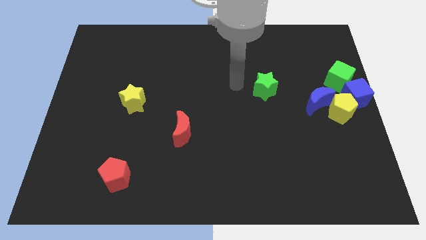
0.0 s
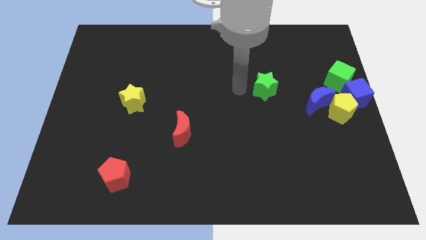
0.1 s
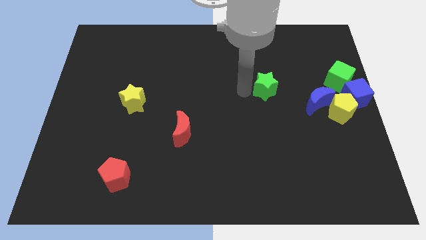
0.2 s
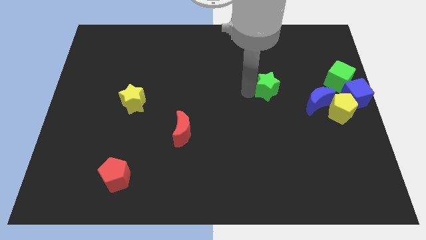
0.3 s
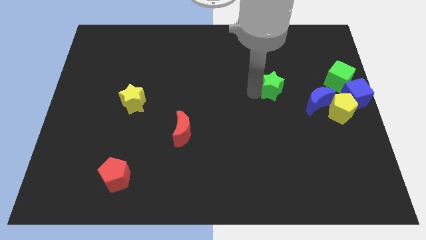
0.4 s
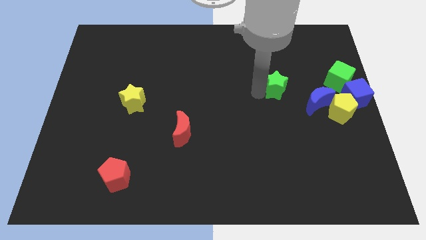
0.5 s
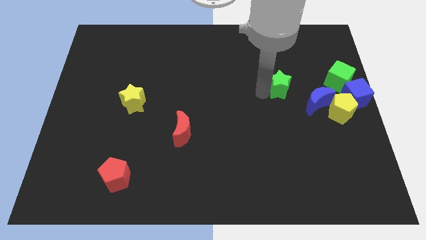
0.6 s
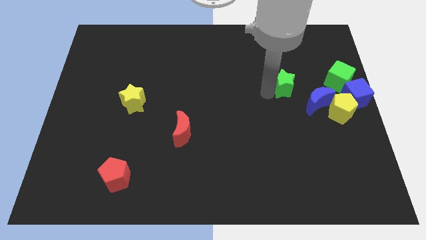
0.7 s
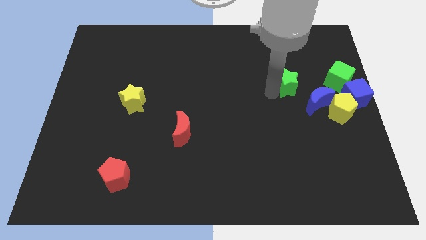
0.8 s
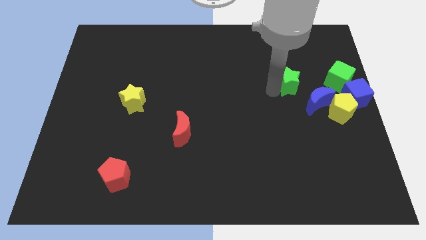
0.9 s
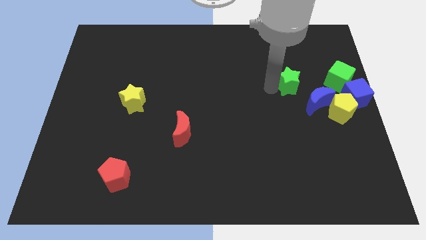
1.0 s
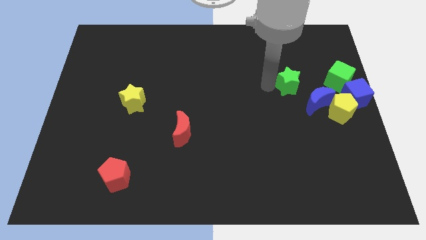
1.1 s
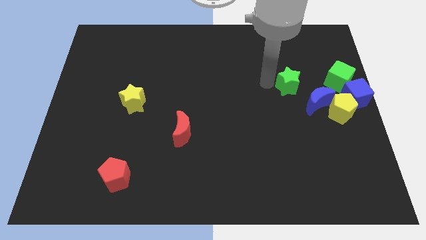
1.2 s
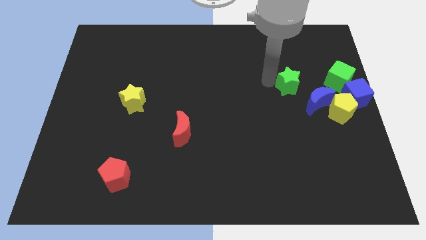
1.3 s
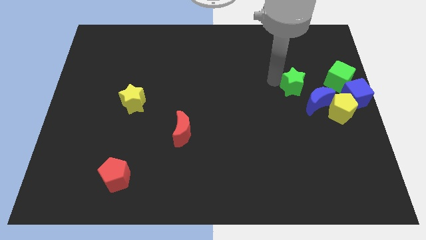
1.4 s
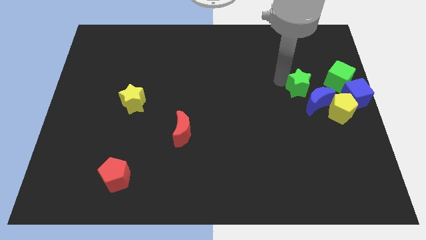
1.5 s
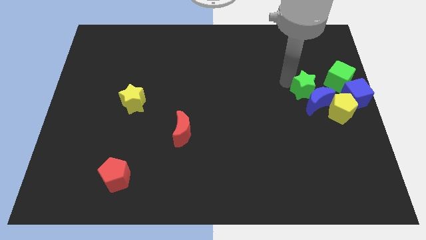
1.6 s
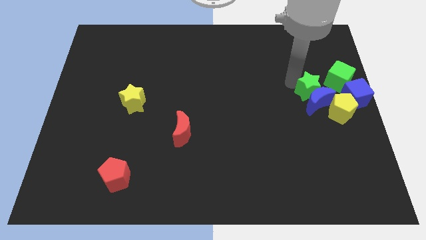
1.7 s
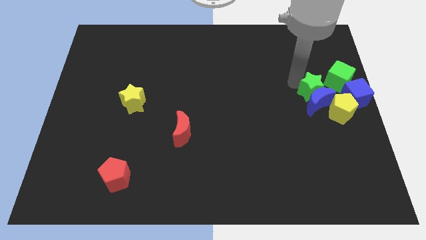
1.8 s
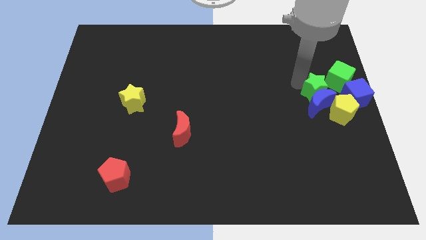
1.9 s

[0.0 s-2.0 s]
push the green star to the top of the blue crescent

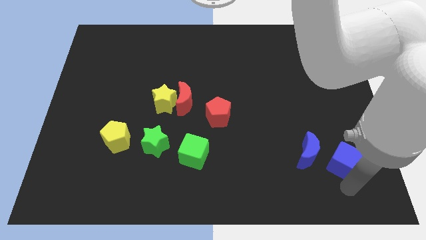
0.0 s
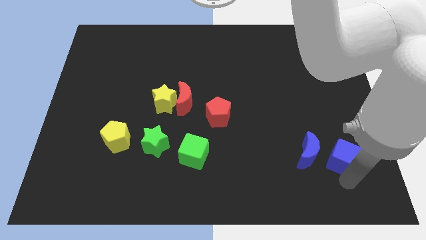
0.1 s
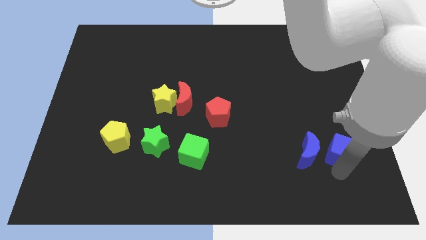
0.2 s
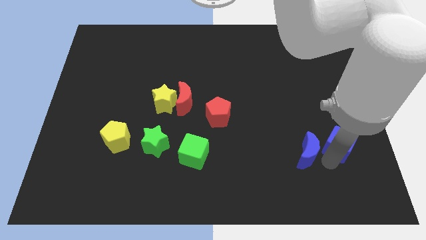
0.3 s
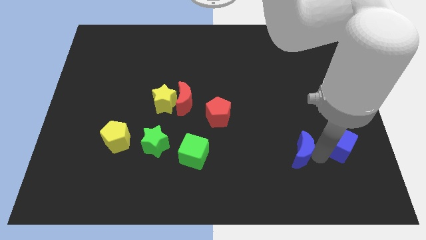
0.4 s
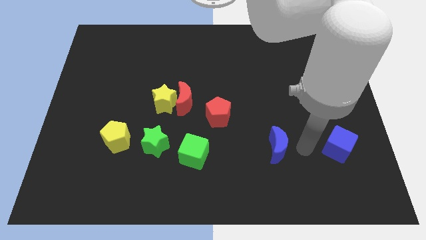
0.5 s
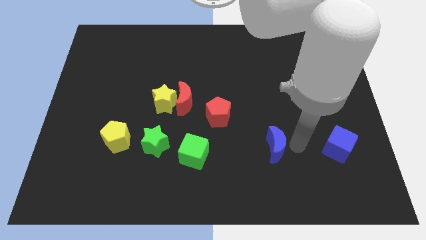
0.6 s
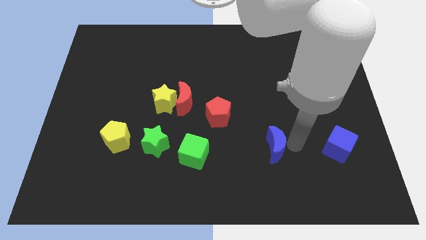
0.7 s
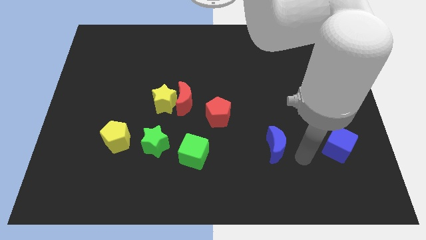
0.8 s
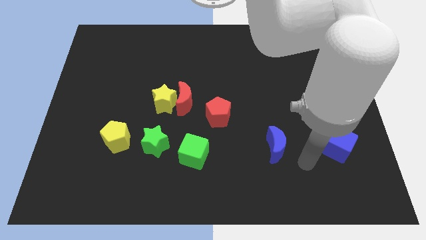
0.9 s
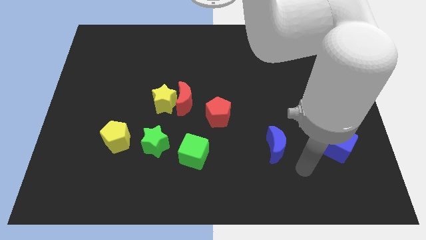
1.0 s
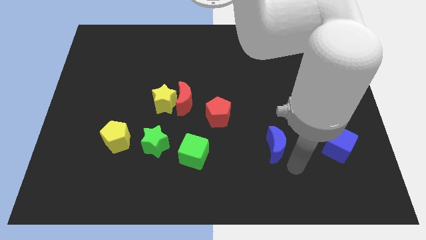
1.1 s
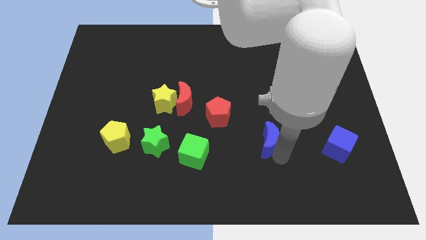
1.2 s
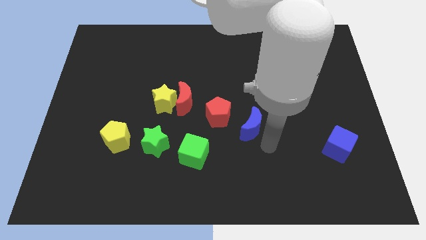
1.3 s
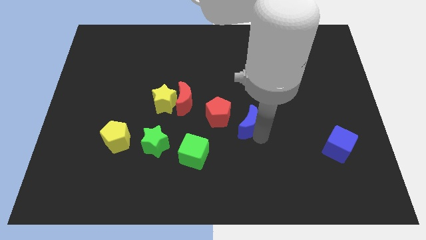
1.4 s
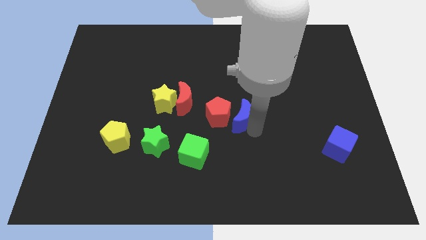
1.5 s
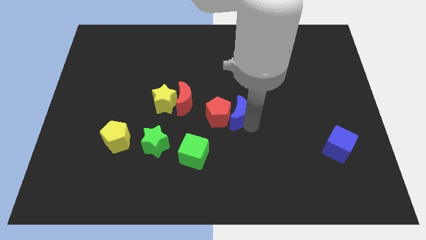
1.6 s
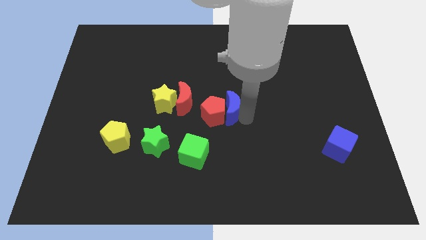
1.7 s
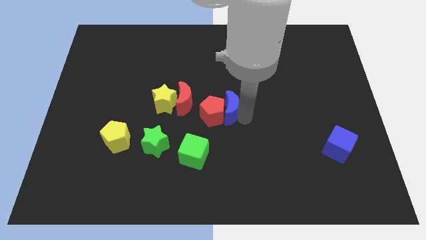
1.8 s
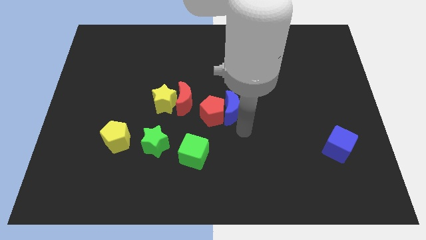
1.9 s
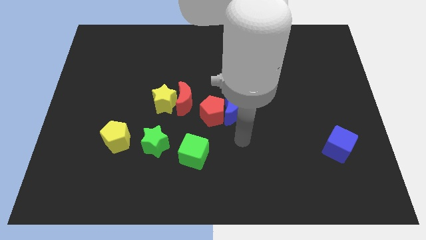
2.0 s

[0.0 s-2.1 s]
place the blue crescent near the red pentagon

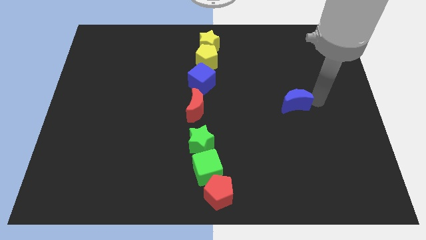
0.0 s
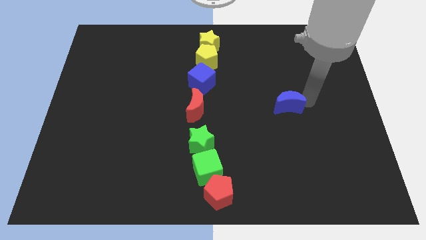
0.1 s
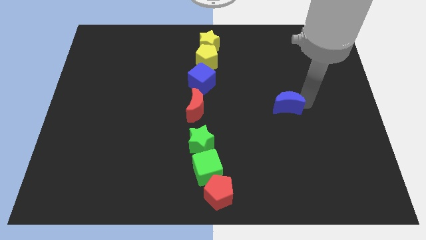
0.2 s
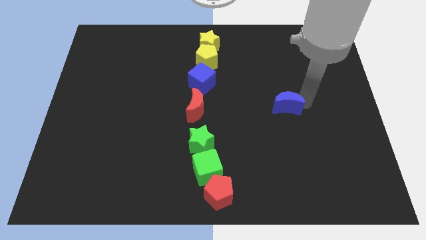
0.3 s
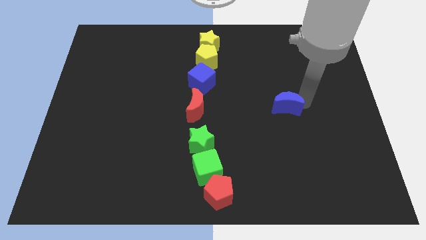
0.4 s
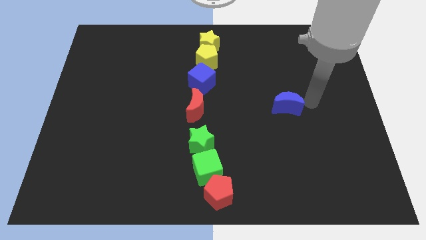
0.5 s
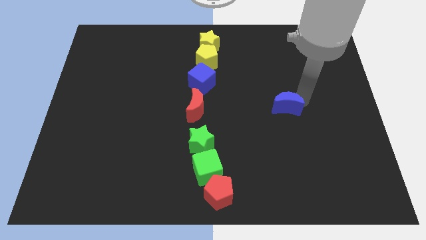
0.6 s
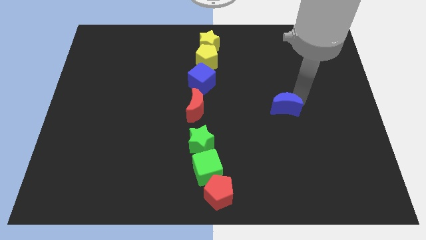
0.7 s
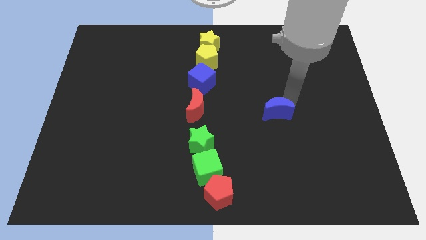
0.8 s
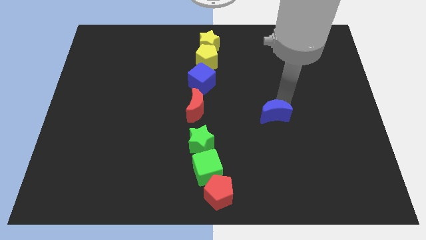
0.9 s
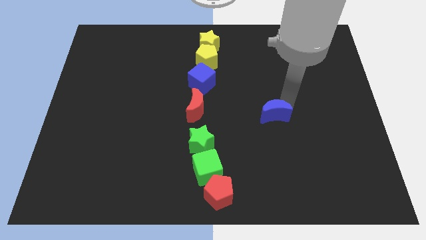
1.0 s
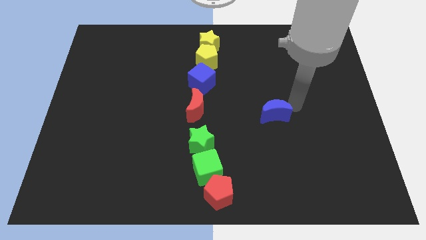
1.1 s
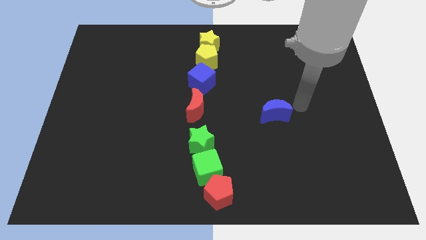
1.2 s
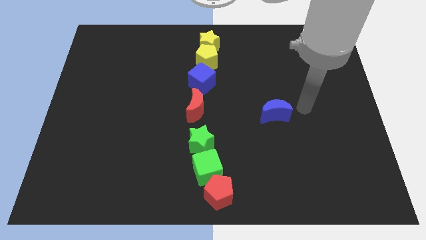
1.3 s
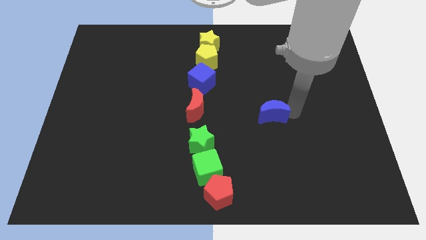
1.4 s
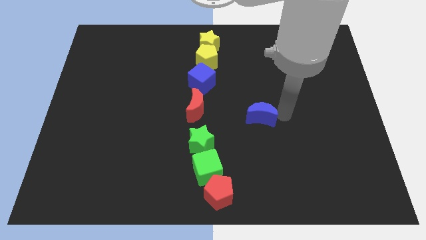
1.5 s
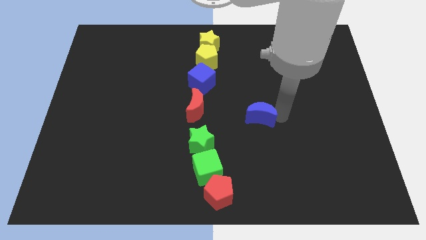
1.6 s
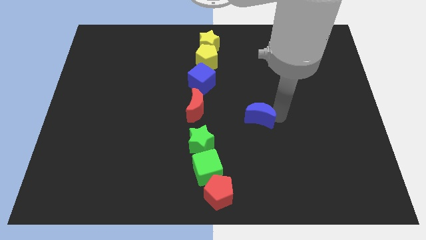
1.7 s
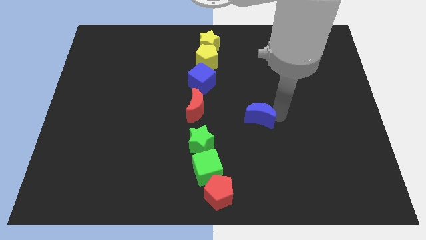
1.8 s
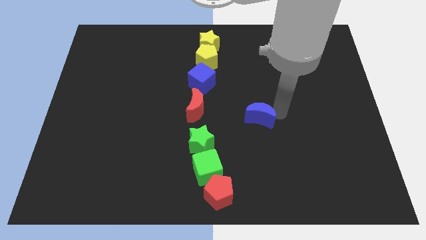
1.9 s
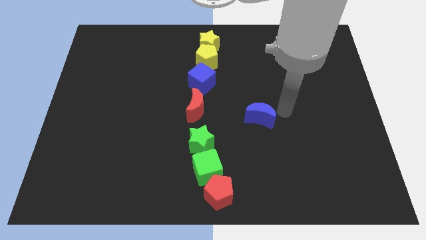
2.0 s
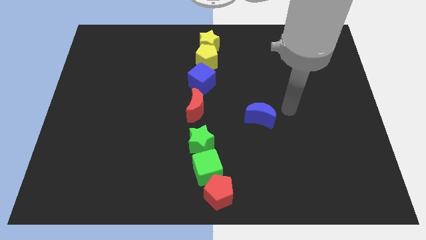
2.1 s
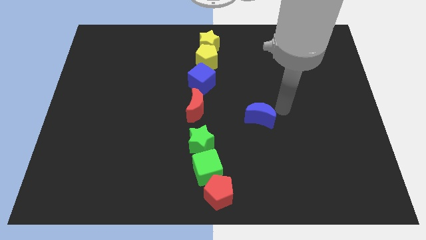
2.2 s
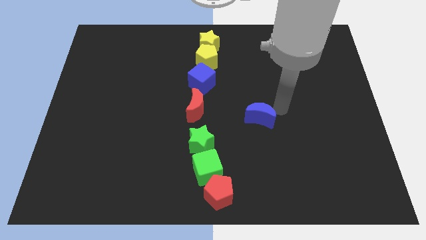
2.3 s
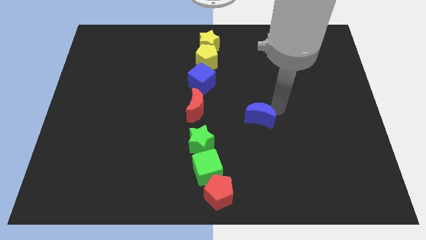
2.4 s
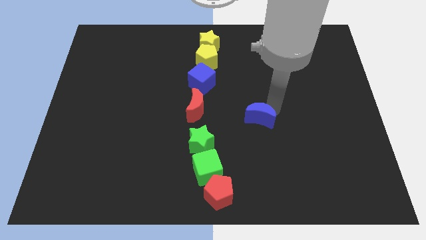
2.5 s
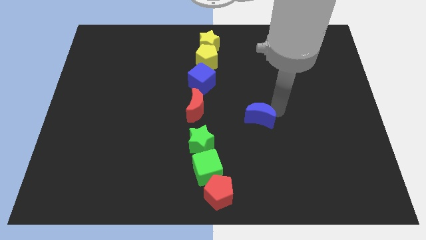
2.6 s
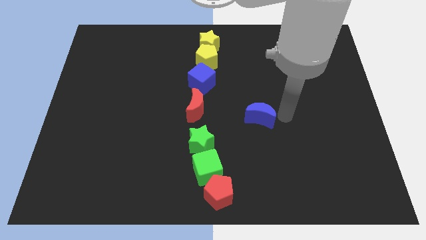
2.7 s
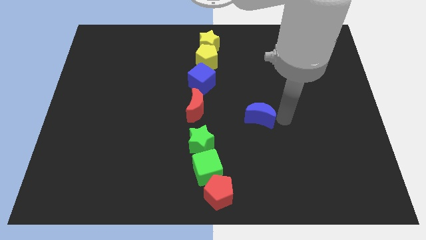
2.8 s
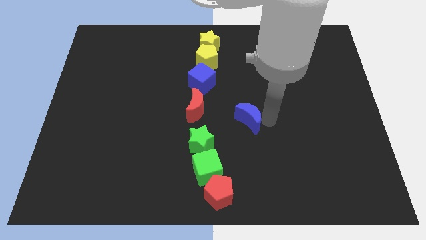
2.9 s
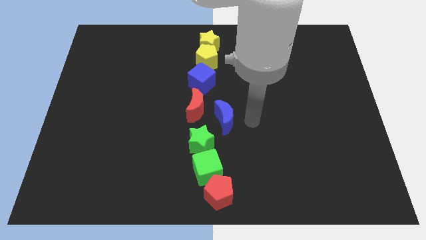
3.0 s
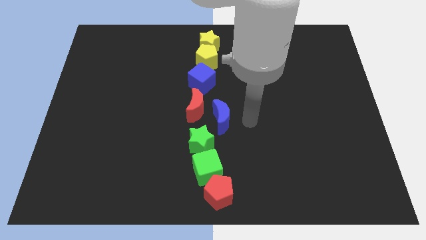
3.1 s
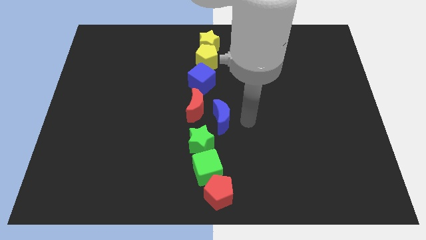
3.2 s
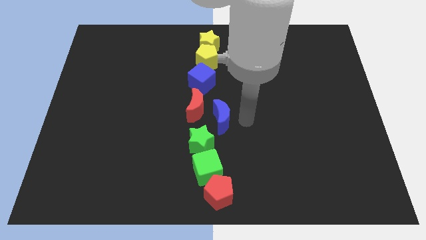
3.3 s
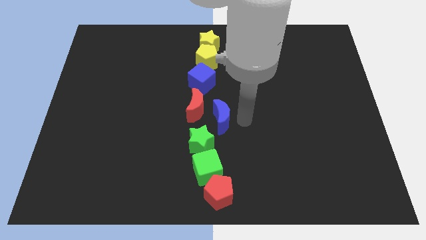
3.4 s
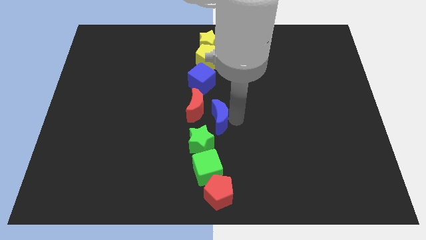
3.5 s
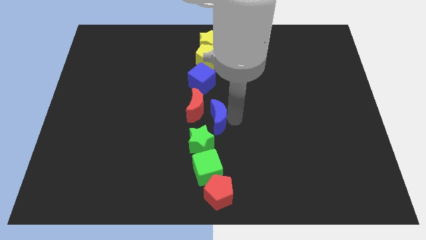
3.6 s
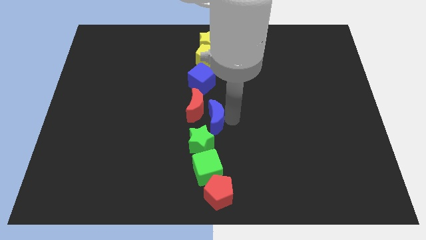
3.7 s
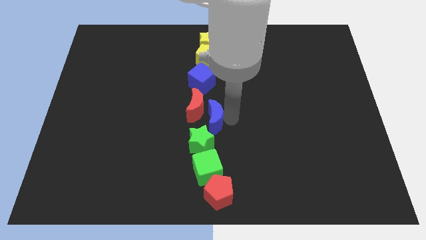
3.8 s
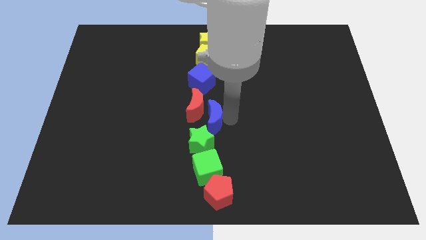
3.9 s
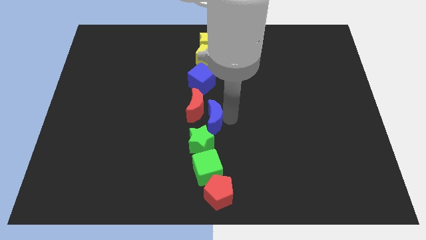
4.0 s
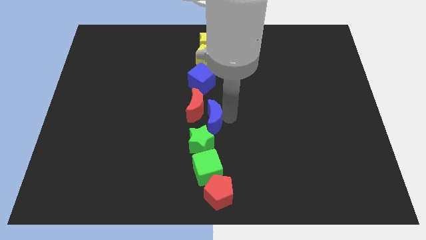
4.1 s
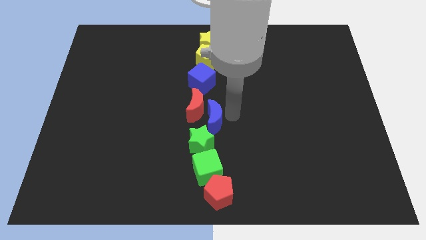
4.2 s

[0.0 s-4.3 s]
put the blue moon at the center of the board

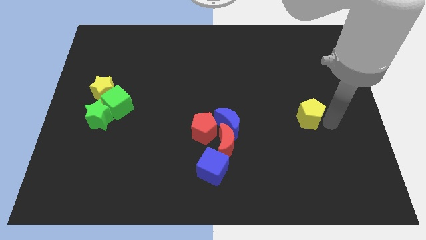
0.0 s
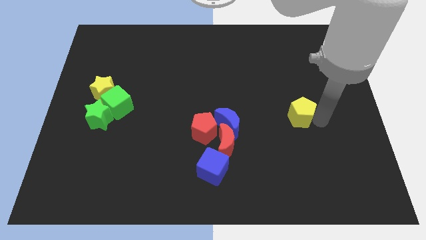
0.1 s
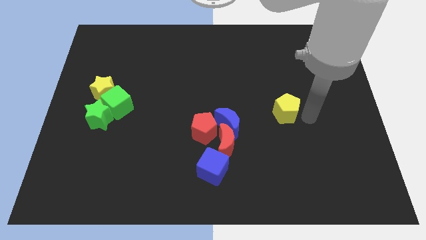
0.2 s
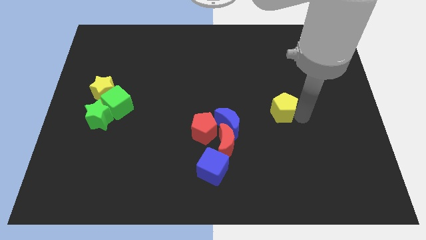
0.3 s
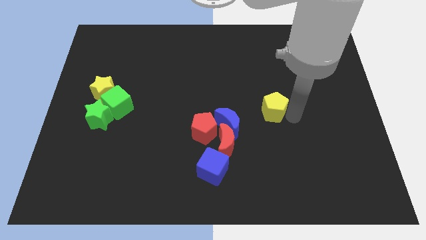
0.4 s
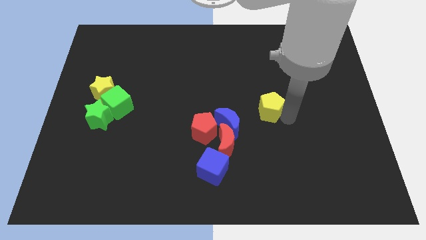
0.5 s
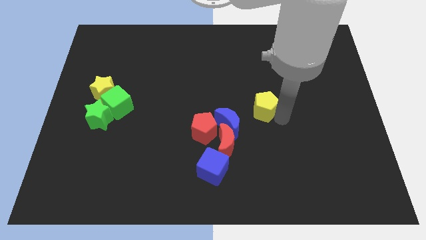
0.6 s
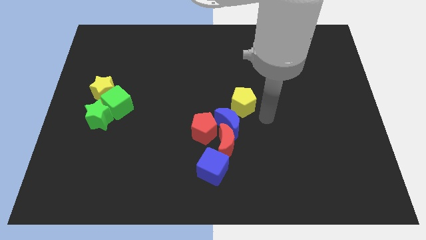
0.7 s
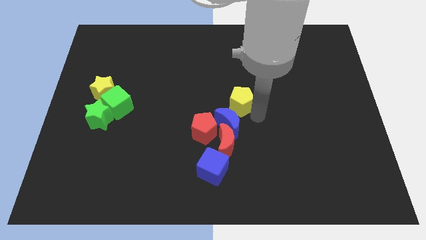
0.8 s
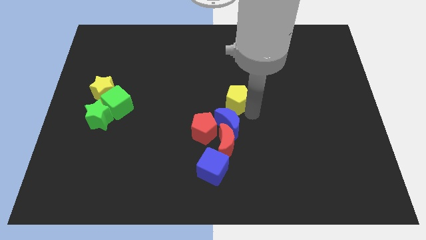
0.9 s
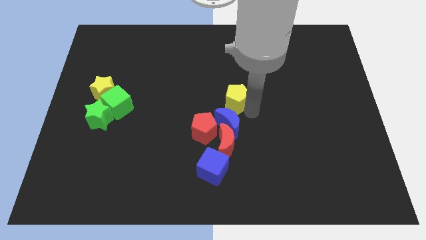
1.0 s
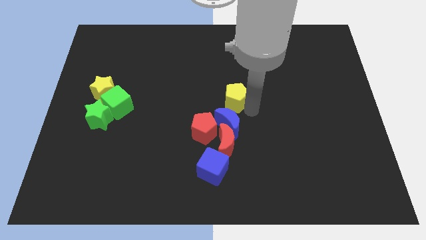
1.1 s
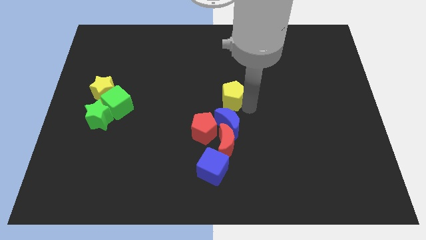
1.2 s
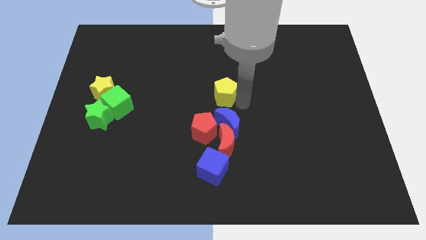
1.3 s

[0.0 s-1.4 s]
place the yellow pentagon above the blue crescent
